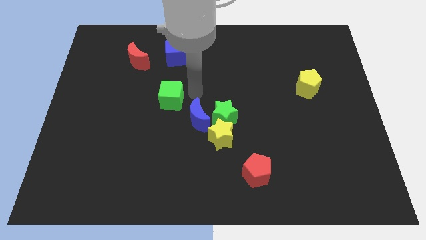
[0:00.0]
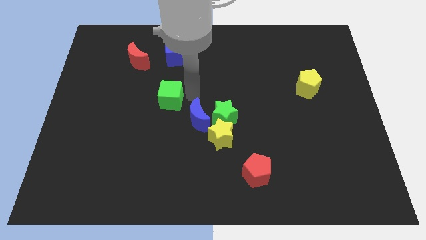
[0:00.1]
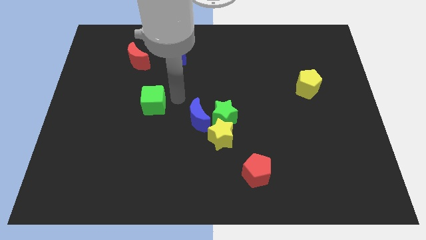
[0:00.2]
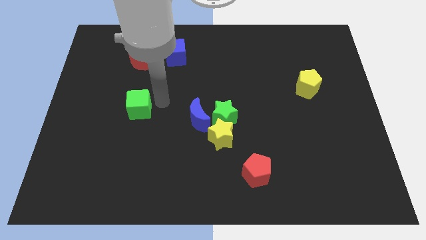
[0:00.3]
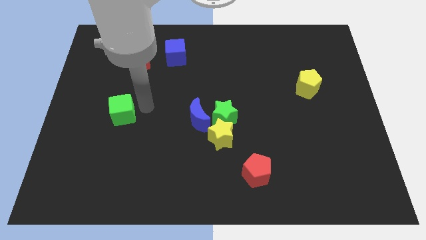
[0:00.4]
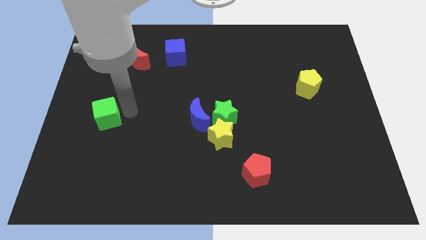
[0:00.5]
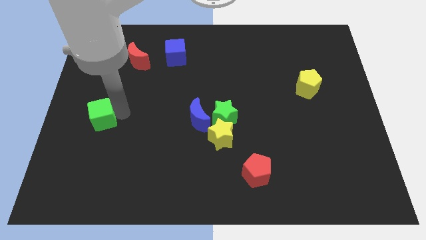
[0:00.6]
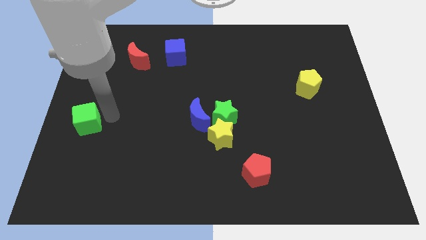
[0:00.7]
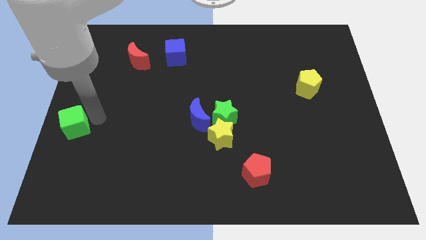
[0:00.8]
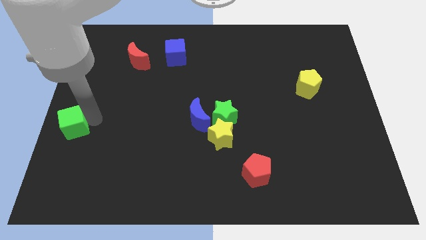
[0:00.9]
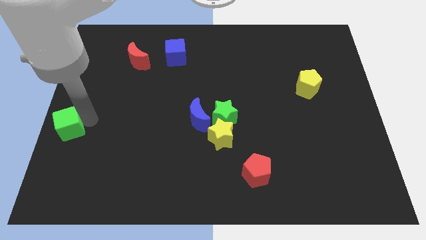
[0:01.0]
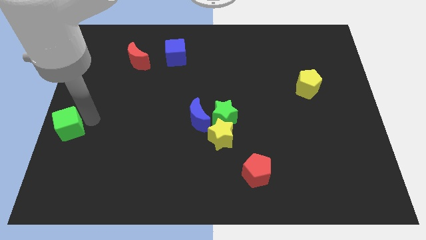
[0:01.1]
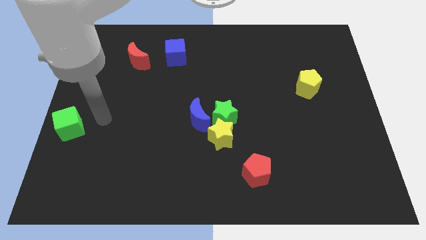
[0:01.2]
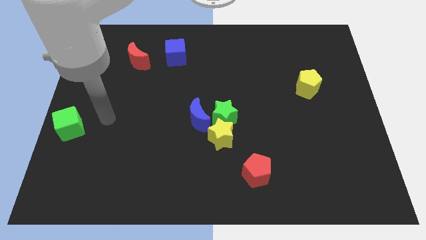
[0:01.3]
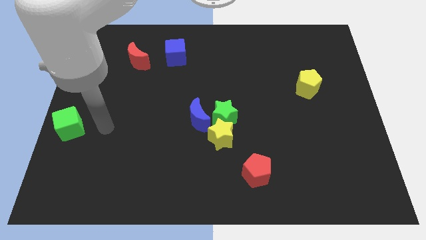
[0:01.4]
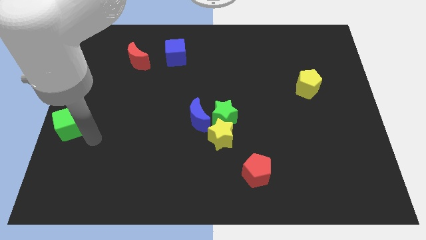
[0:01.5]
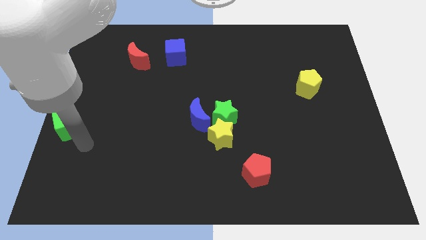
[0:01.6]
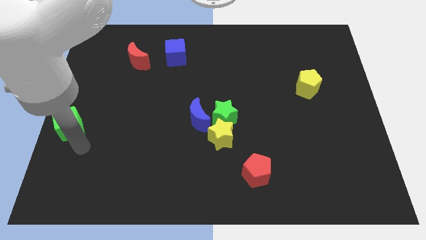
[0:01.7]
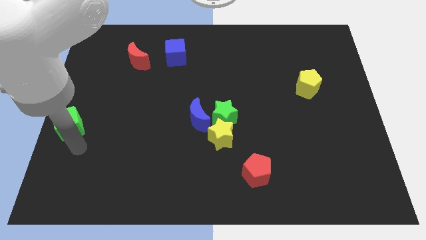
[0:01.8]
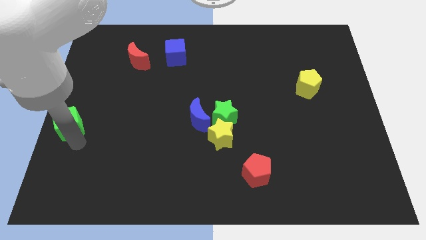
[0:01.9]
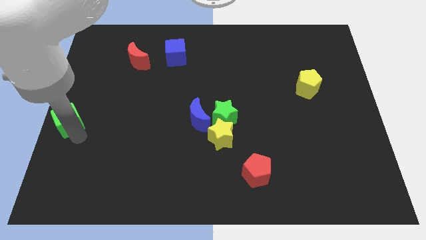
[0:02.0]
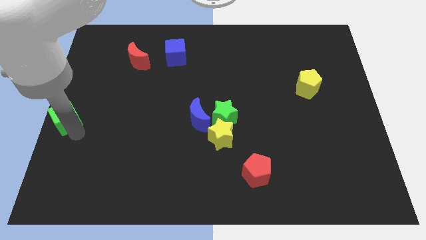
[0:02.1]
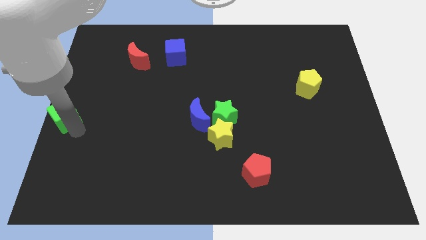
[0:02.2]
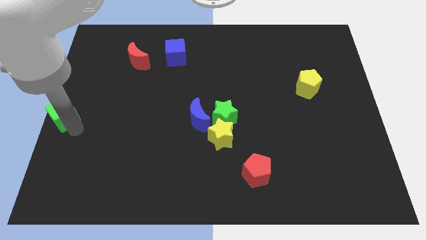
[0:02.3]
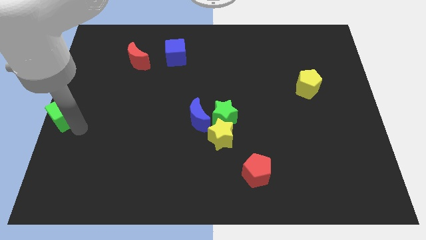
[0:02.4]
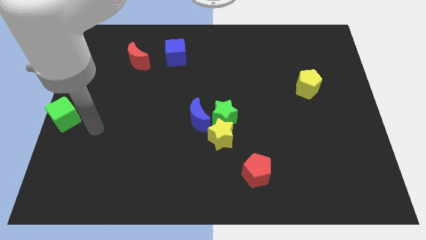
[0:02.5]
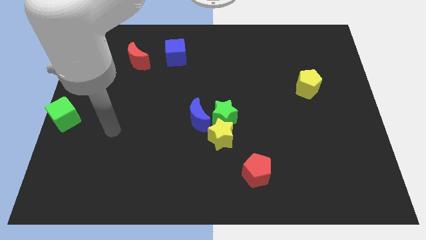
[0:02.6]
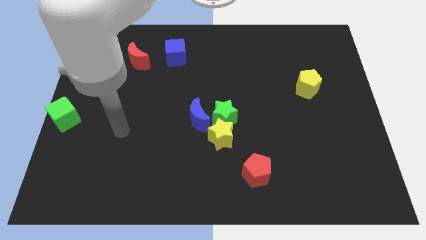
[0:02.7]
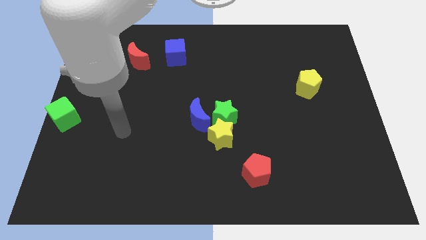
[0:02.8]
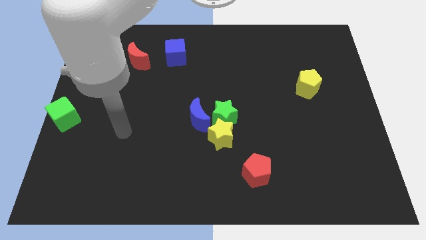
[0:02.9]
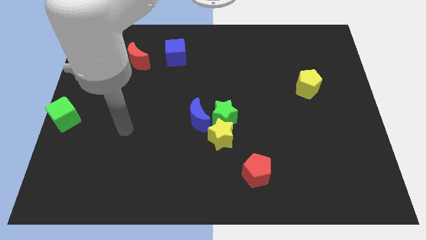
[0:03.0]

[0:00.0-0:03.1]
push the green cube parallel to the group of blocks

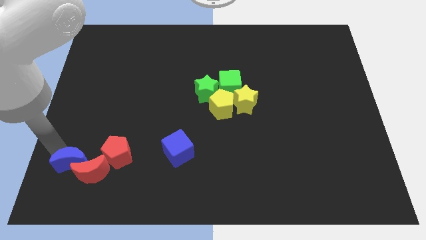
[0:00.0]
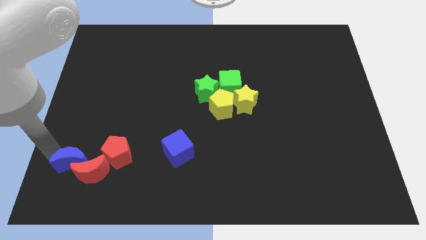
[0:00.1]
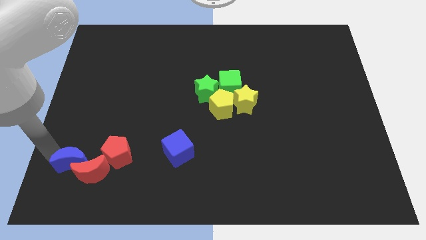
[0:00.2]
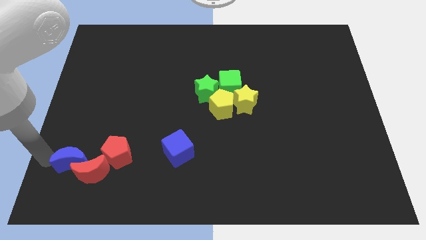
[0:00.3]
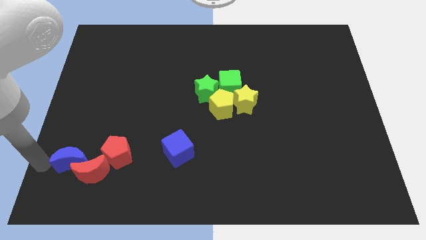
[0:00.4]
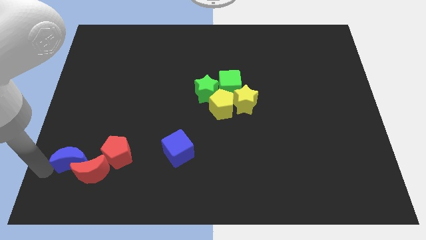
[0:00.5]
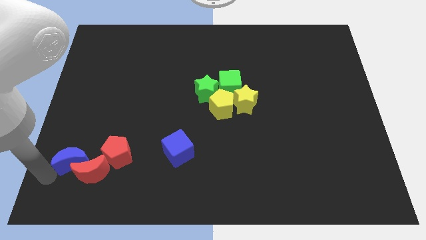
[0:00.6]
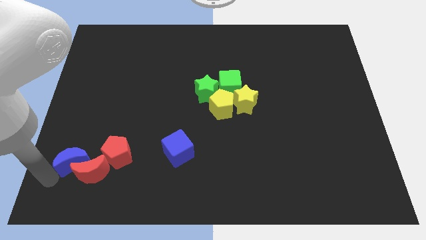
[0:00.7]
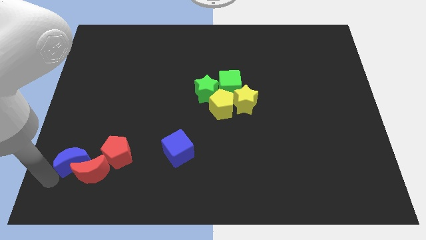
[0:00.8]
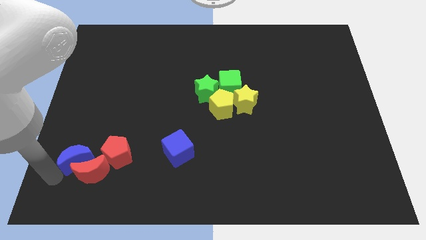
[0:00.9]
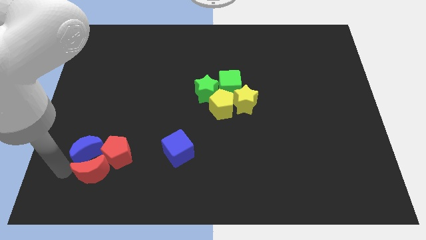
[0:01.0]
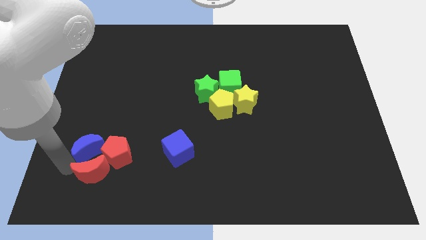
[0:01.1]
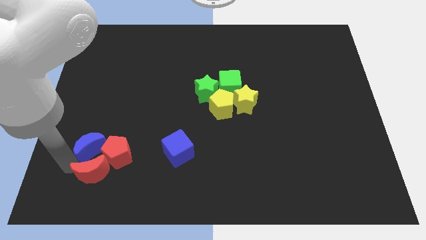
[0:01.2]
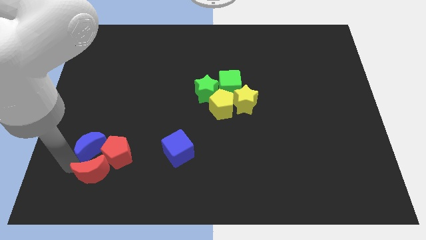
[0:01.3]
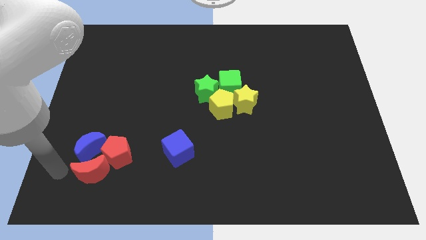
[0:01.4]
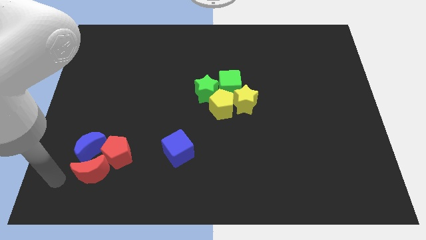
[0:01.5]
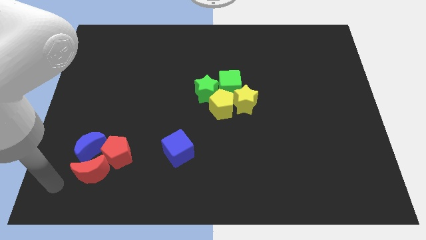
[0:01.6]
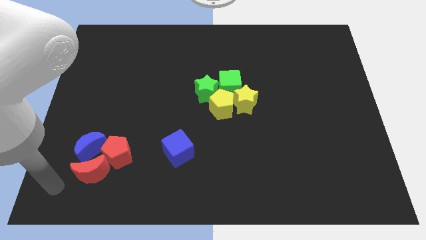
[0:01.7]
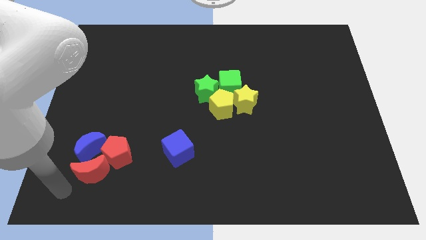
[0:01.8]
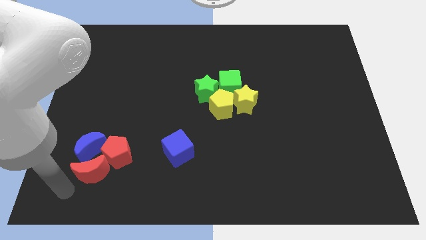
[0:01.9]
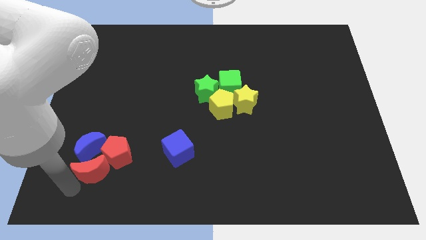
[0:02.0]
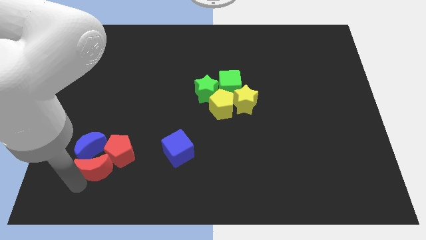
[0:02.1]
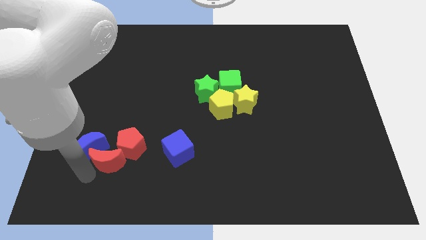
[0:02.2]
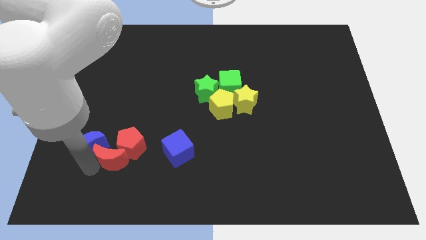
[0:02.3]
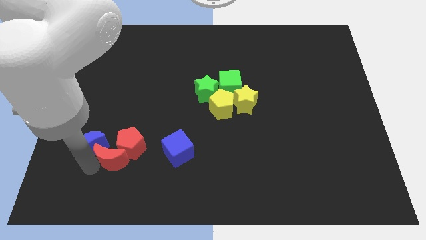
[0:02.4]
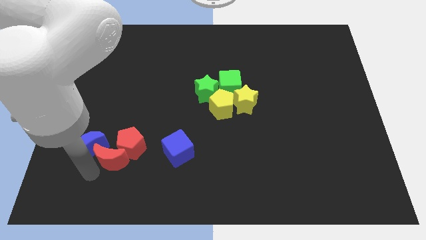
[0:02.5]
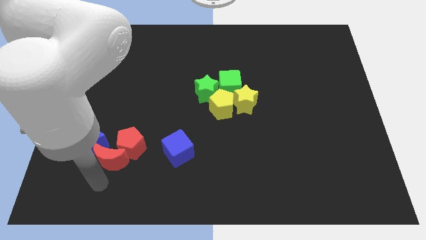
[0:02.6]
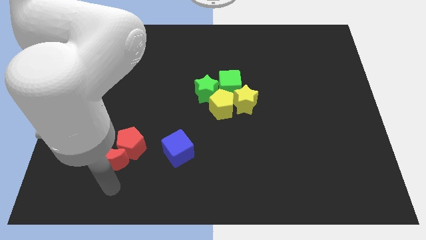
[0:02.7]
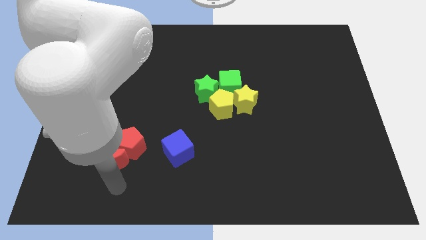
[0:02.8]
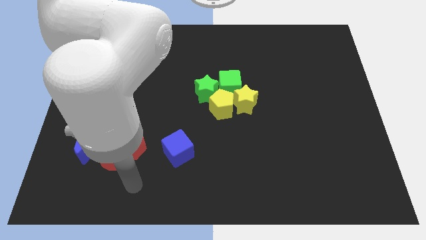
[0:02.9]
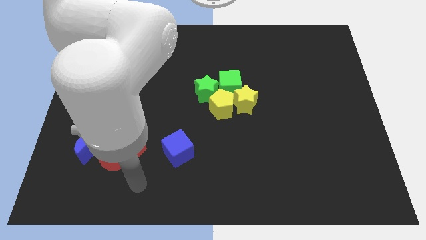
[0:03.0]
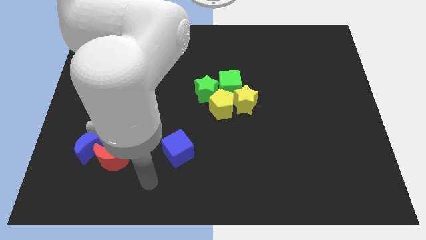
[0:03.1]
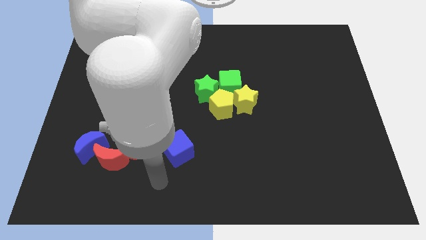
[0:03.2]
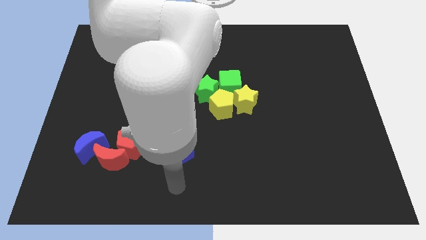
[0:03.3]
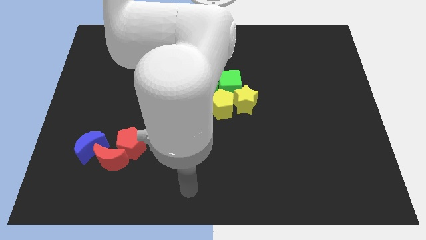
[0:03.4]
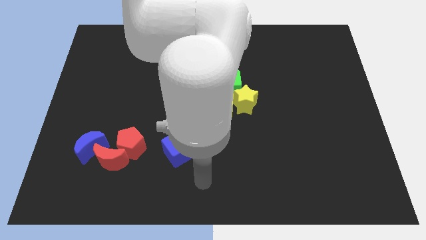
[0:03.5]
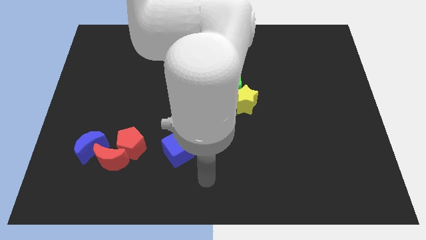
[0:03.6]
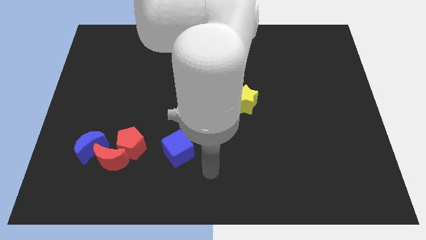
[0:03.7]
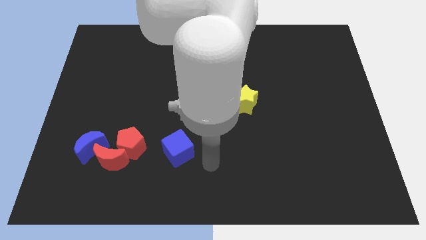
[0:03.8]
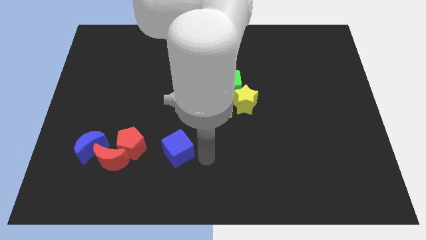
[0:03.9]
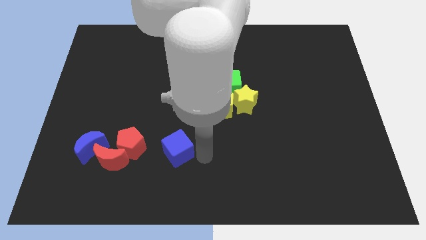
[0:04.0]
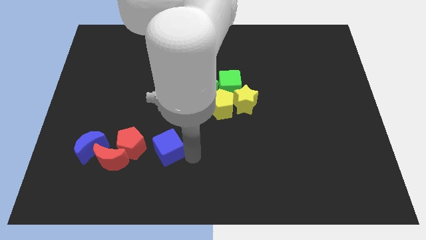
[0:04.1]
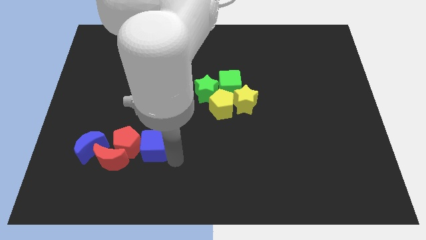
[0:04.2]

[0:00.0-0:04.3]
place the blue blocks on either sides of red blocks

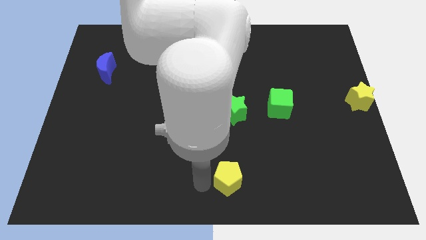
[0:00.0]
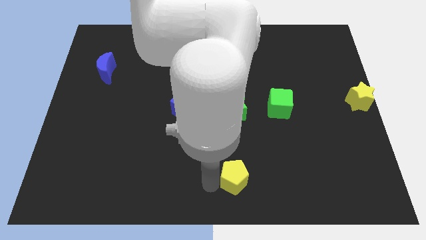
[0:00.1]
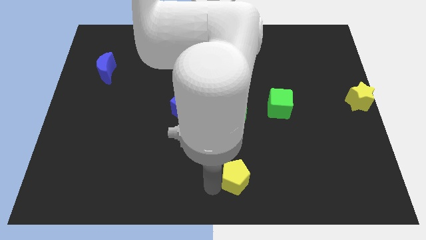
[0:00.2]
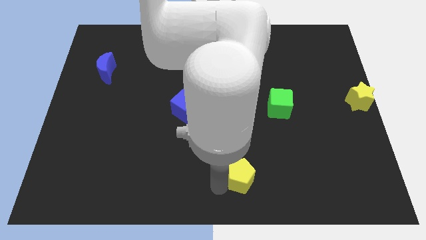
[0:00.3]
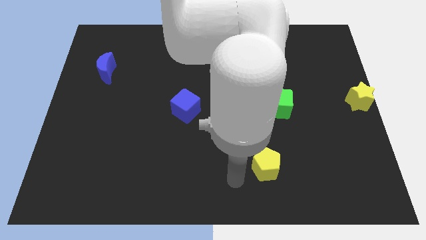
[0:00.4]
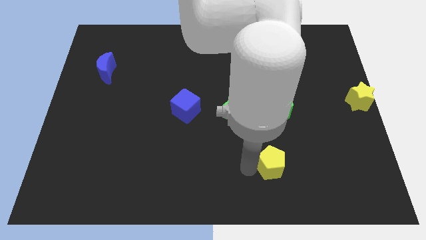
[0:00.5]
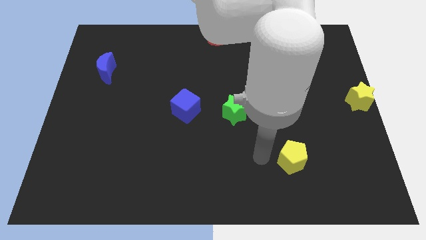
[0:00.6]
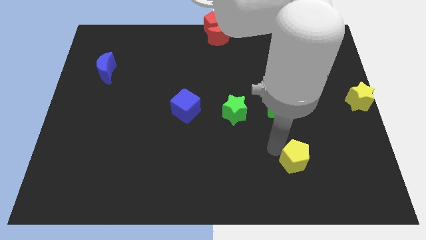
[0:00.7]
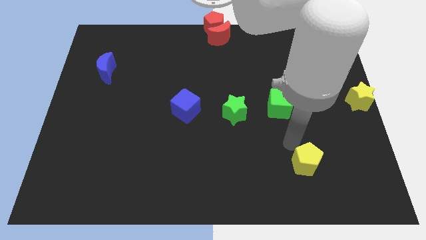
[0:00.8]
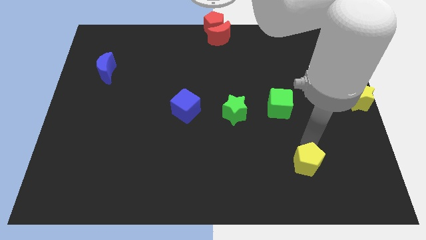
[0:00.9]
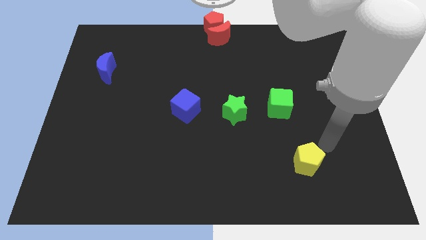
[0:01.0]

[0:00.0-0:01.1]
push the yellow pentagon slightly to the right

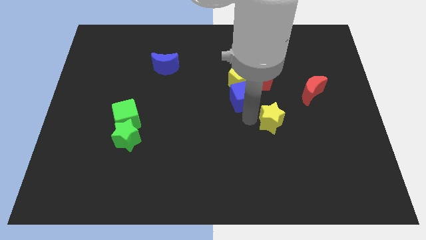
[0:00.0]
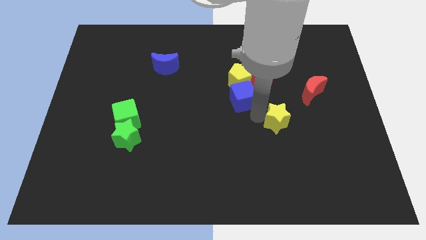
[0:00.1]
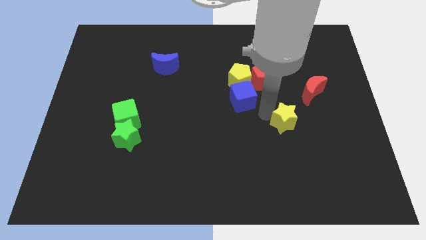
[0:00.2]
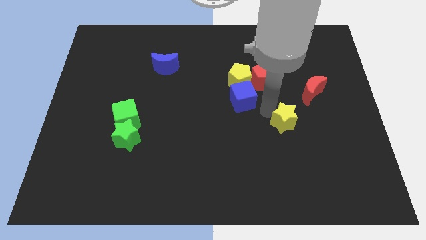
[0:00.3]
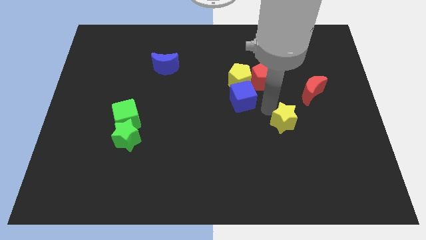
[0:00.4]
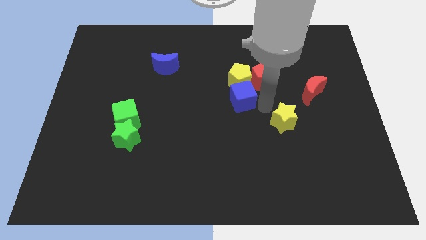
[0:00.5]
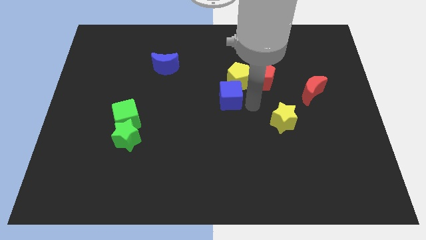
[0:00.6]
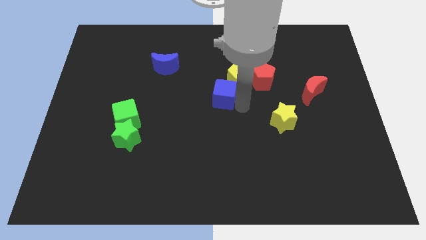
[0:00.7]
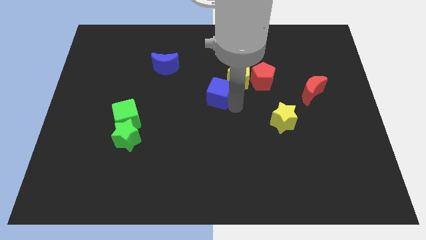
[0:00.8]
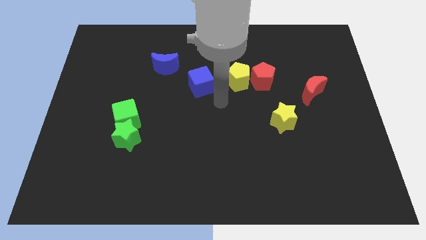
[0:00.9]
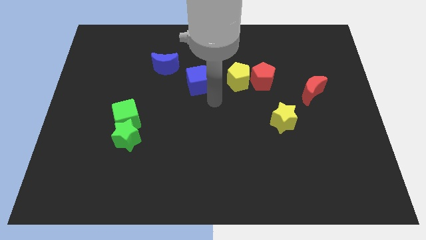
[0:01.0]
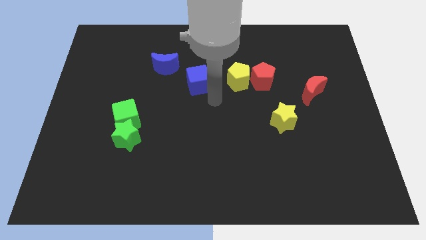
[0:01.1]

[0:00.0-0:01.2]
push the blue cube slightly upwards
